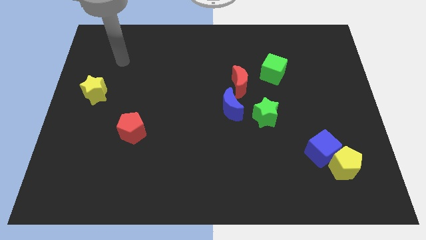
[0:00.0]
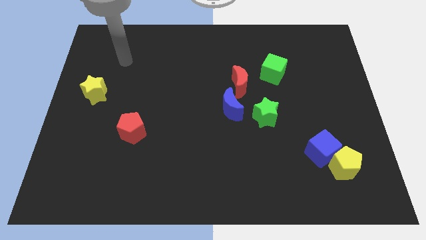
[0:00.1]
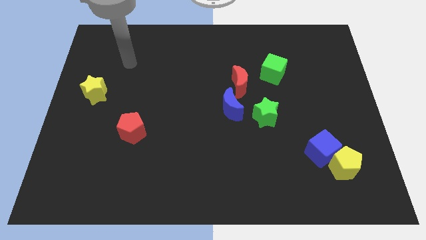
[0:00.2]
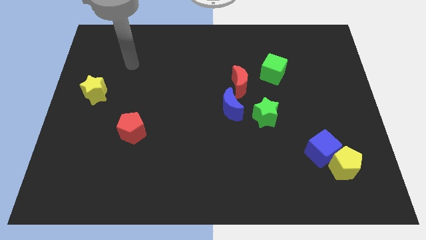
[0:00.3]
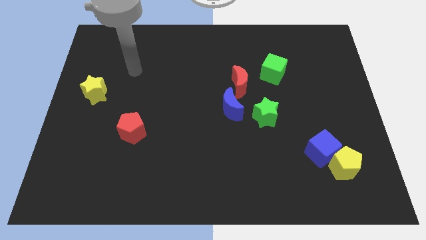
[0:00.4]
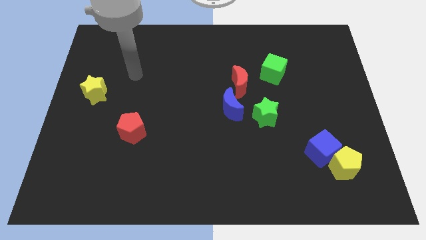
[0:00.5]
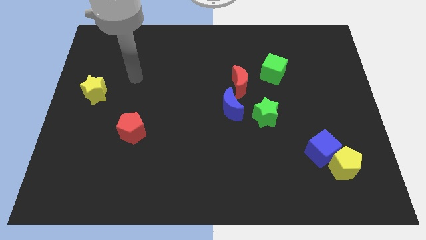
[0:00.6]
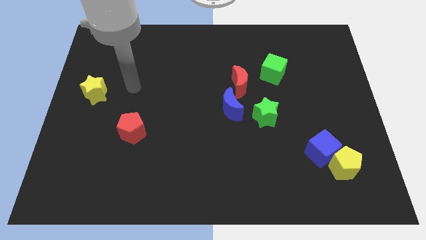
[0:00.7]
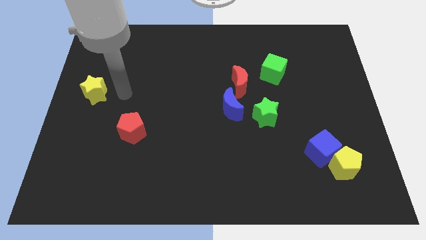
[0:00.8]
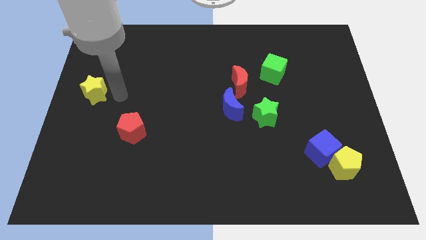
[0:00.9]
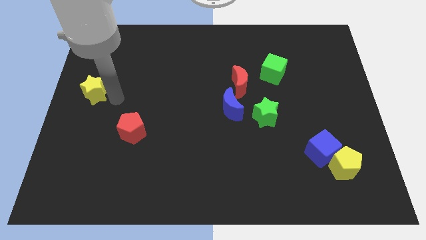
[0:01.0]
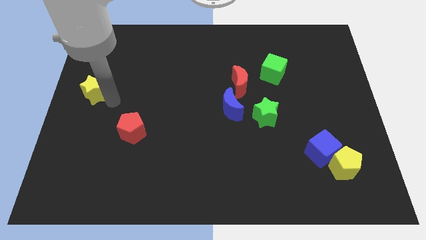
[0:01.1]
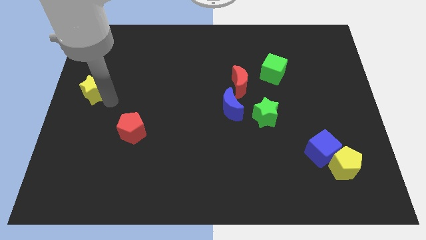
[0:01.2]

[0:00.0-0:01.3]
point your arm at the bottom right of the yellow star

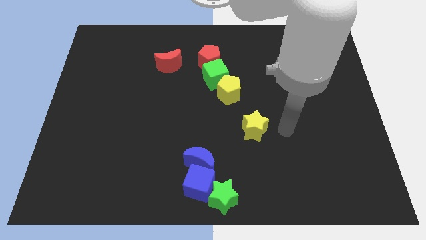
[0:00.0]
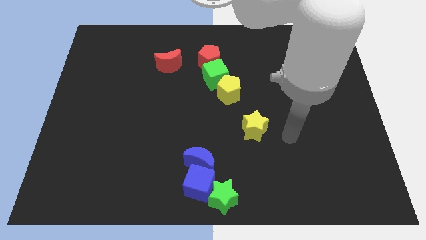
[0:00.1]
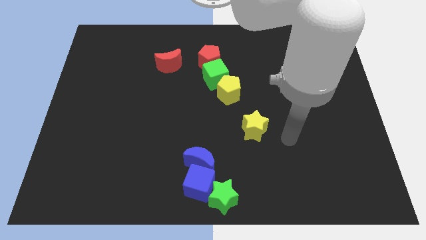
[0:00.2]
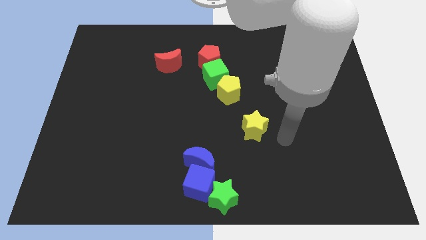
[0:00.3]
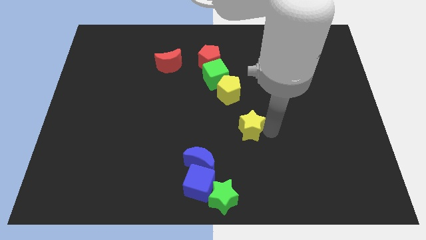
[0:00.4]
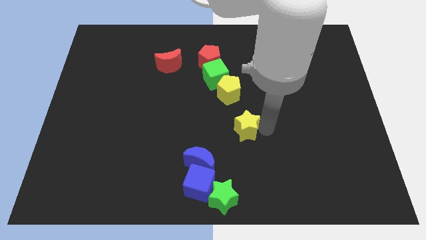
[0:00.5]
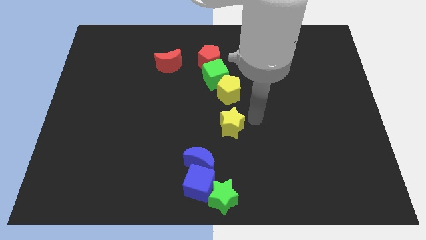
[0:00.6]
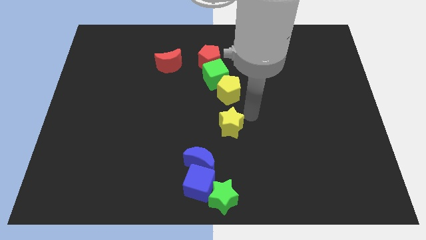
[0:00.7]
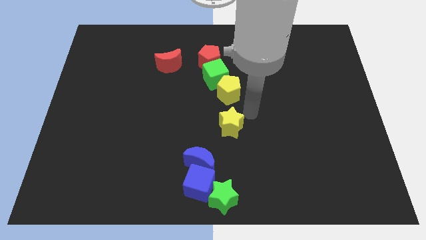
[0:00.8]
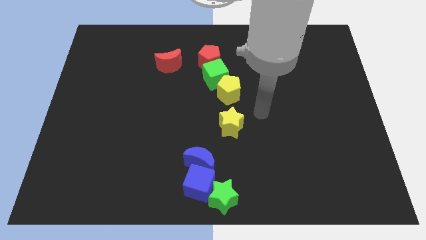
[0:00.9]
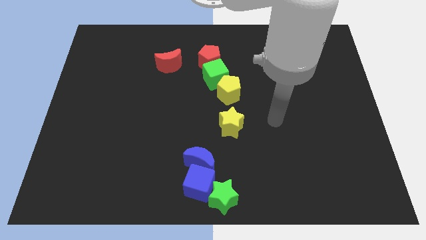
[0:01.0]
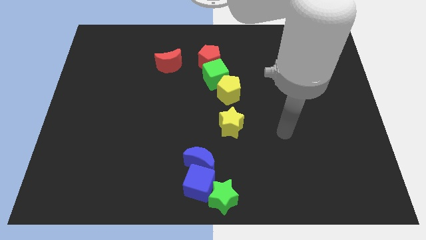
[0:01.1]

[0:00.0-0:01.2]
place the yellow star vertically below the yellow pentagon

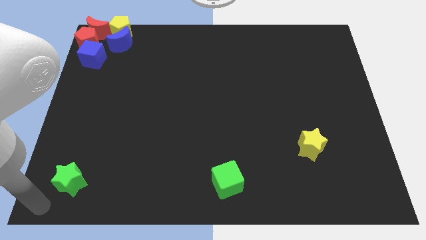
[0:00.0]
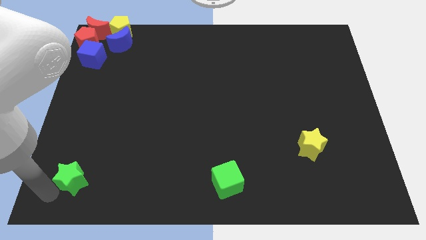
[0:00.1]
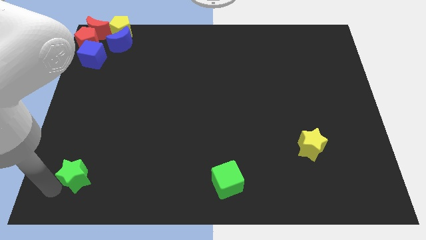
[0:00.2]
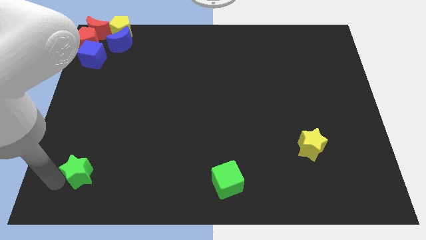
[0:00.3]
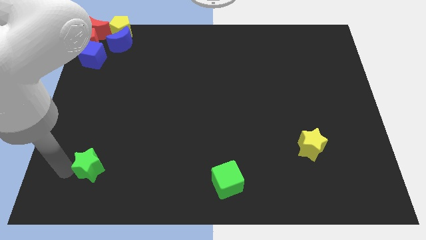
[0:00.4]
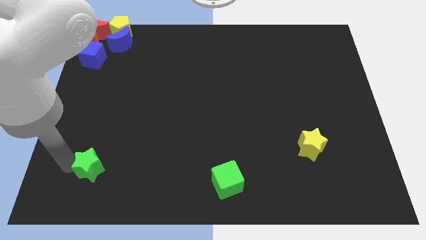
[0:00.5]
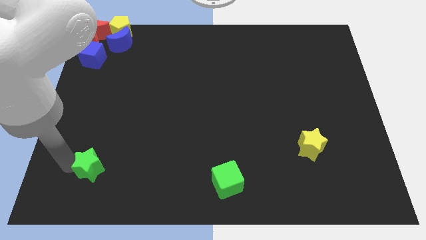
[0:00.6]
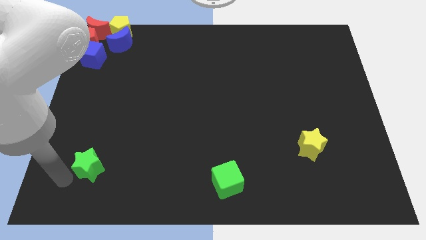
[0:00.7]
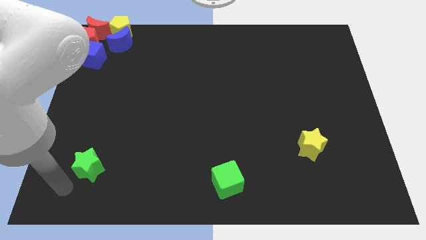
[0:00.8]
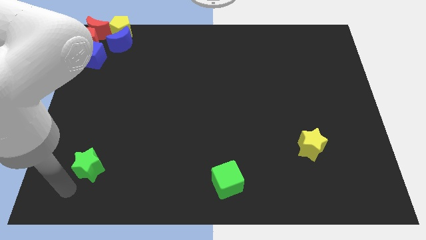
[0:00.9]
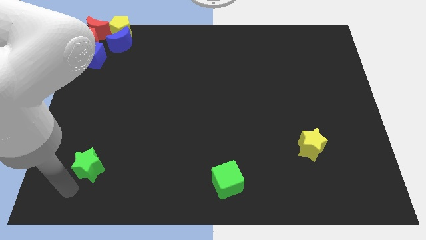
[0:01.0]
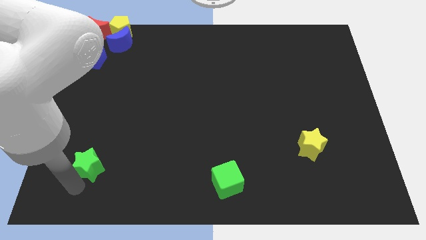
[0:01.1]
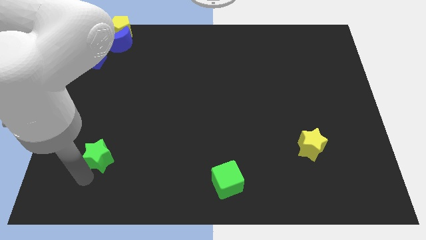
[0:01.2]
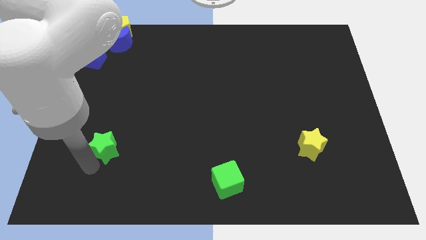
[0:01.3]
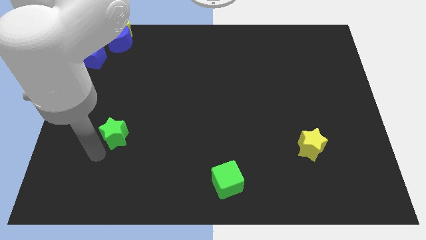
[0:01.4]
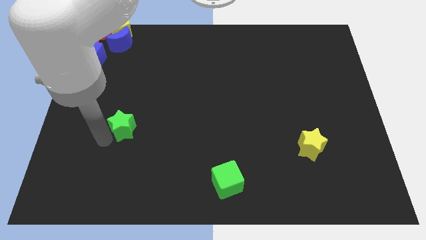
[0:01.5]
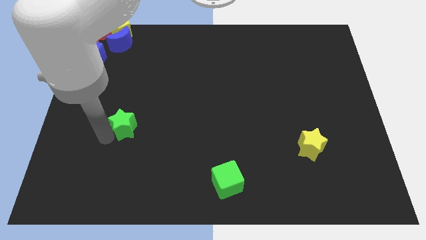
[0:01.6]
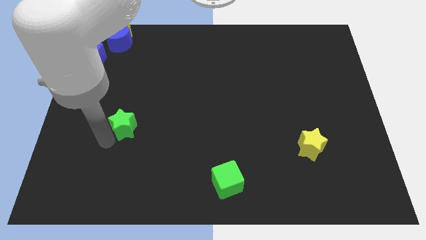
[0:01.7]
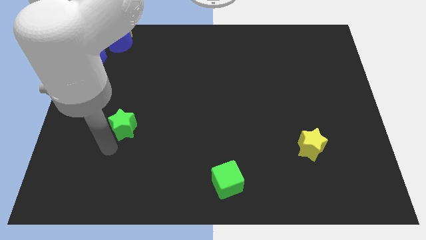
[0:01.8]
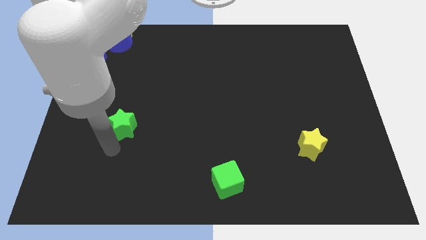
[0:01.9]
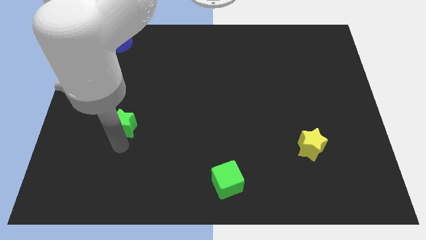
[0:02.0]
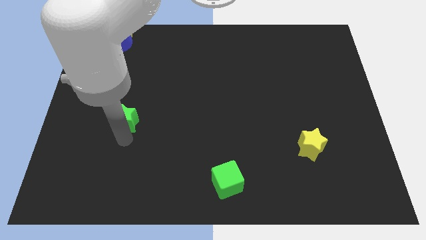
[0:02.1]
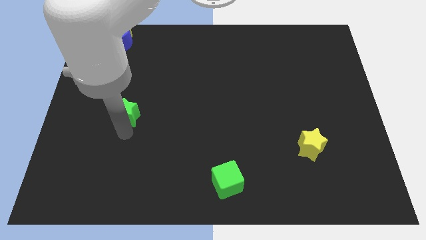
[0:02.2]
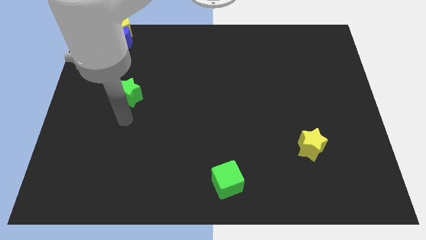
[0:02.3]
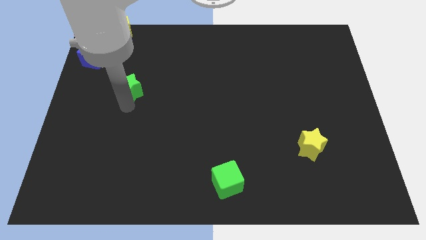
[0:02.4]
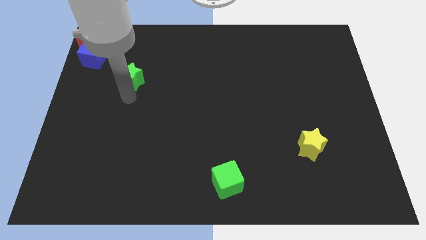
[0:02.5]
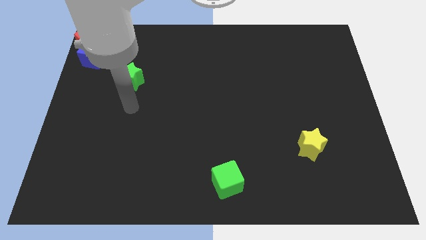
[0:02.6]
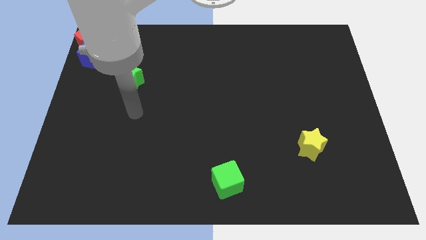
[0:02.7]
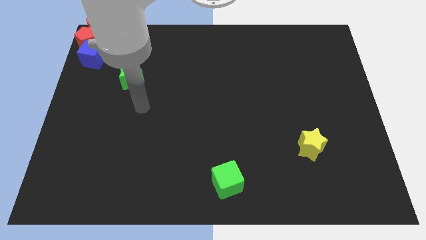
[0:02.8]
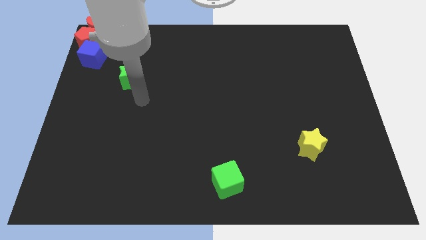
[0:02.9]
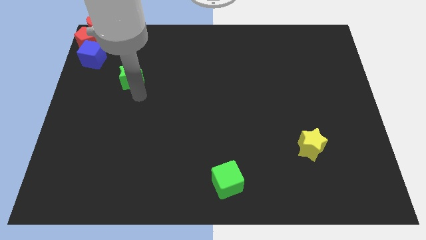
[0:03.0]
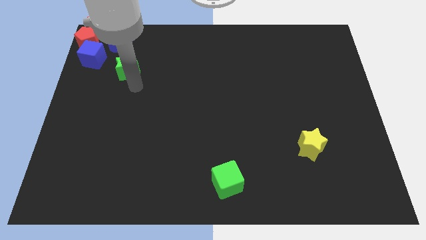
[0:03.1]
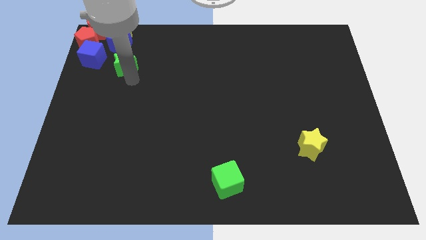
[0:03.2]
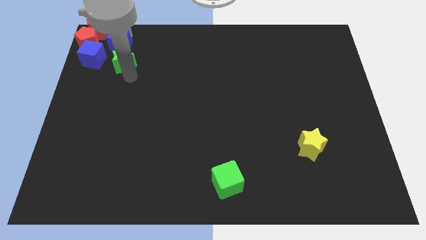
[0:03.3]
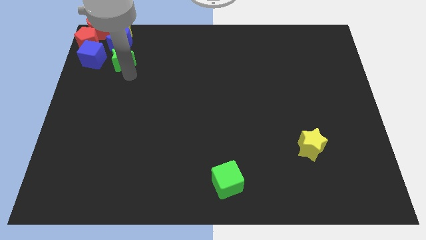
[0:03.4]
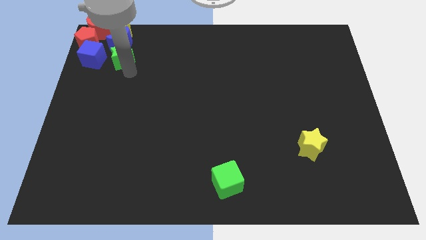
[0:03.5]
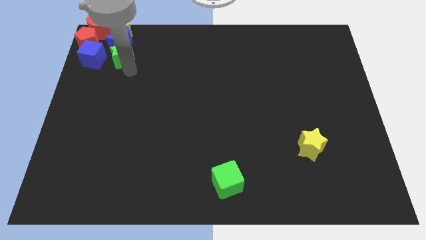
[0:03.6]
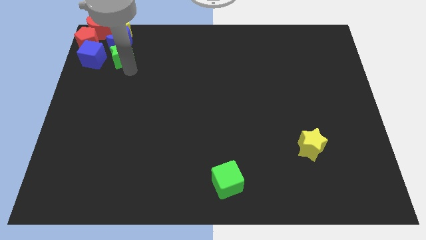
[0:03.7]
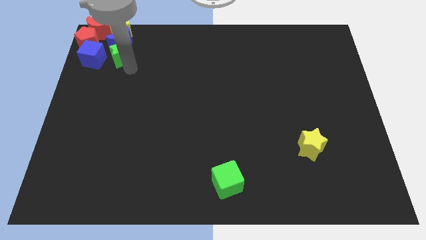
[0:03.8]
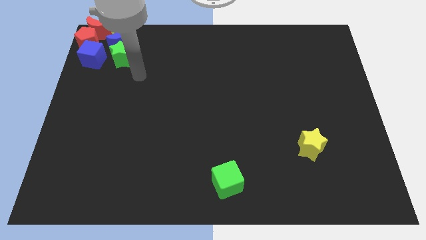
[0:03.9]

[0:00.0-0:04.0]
place the green star to the right side of the blue cube

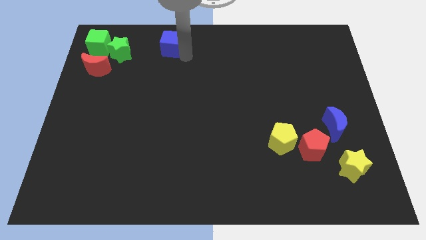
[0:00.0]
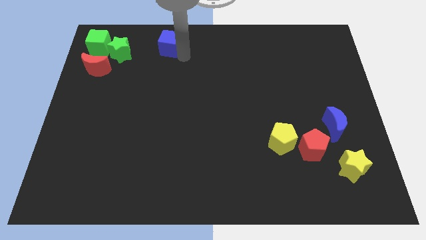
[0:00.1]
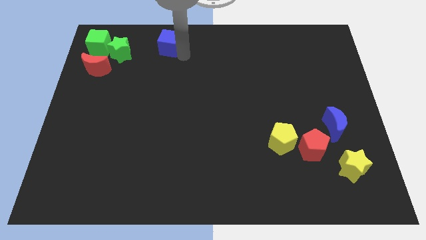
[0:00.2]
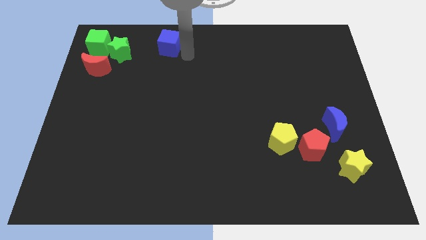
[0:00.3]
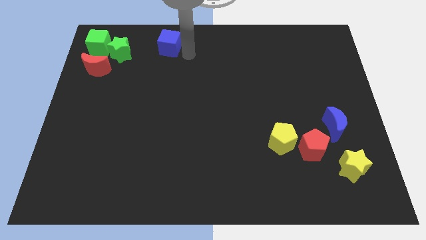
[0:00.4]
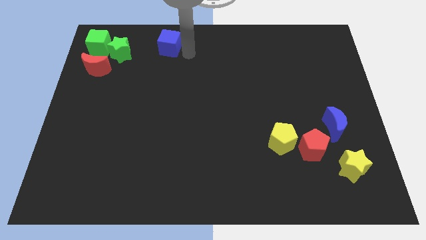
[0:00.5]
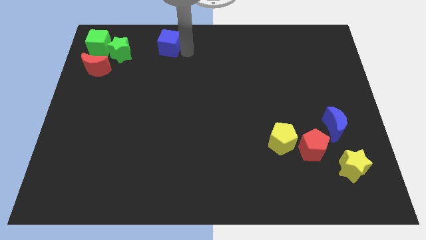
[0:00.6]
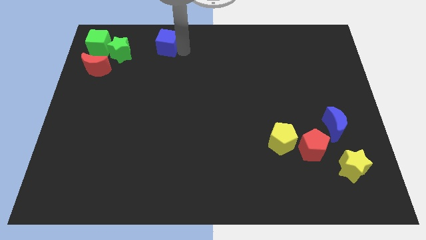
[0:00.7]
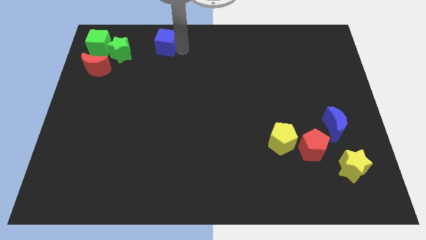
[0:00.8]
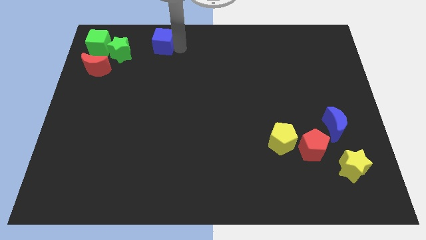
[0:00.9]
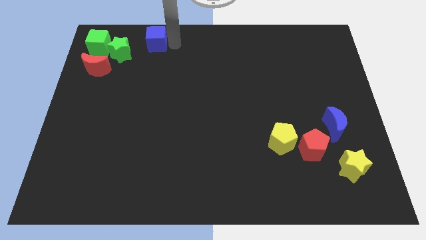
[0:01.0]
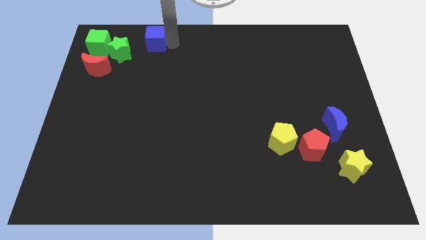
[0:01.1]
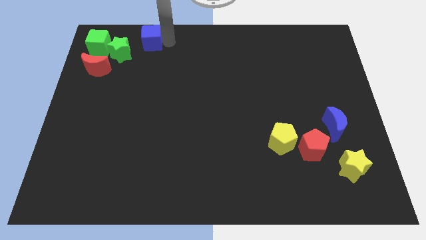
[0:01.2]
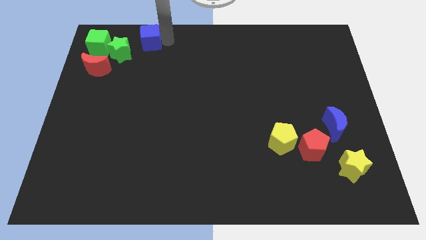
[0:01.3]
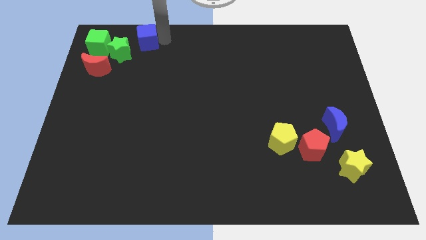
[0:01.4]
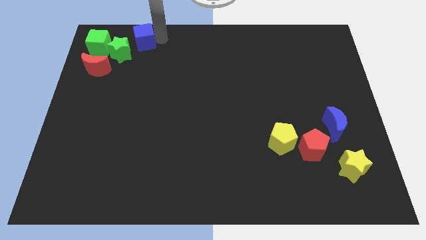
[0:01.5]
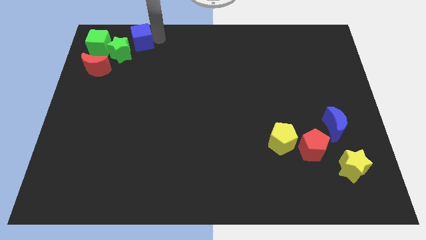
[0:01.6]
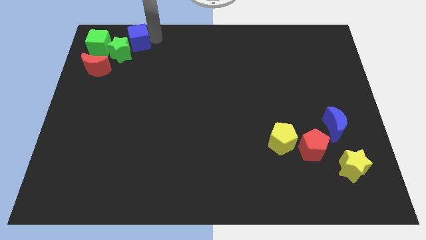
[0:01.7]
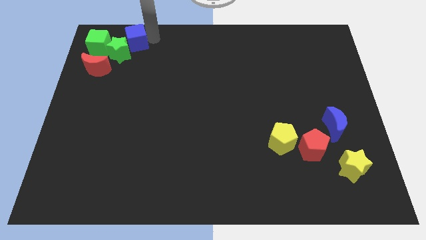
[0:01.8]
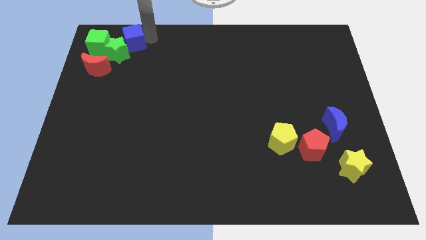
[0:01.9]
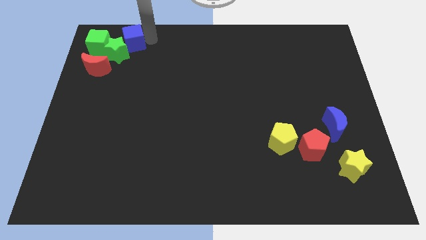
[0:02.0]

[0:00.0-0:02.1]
push the blue cube into the green star

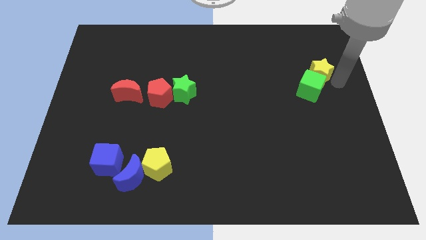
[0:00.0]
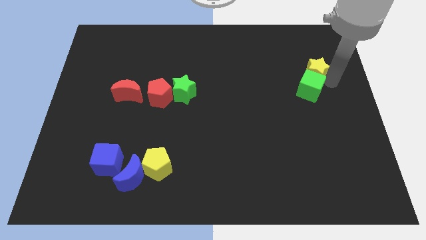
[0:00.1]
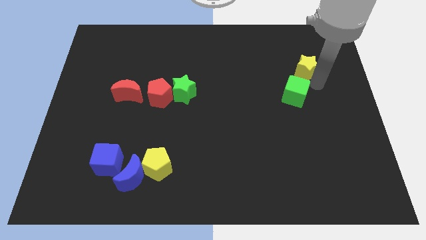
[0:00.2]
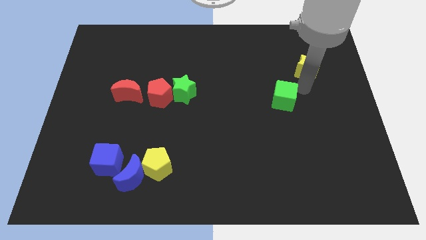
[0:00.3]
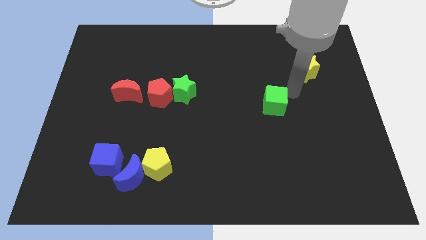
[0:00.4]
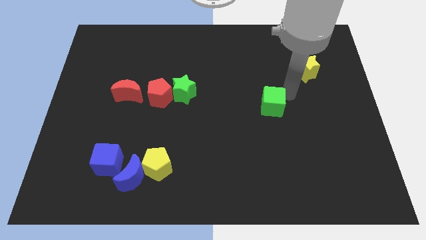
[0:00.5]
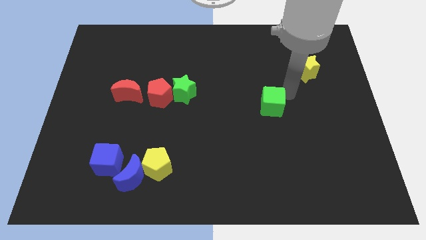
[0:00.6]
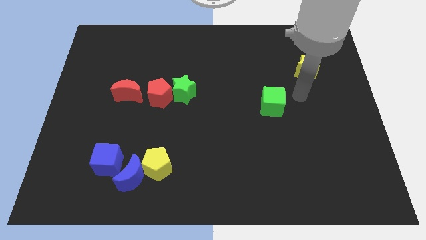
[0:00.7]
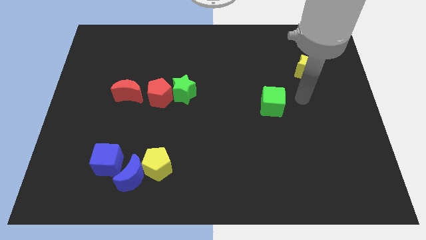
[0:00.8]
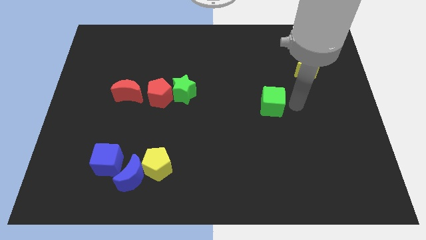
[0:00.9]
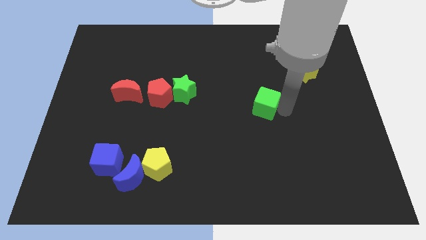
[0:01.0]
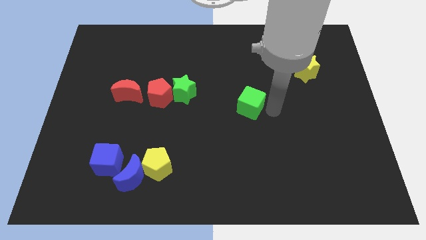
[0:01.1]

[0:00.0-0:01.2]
drag the green cube towards the center of board
